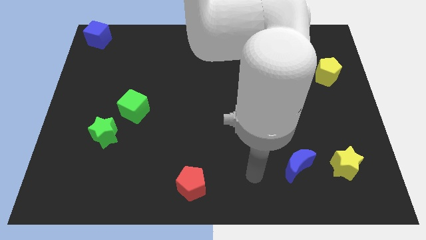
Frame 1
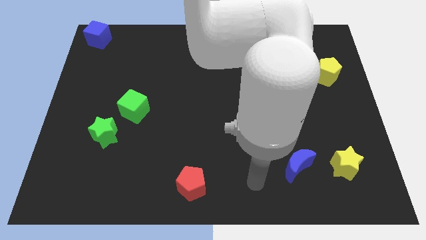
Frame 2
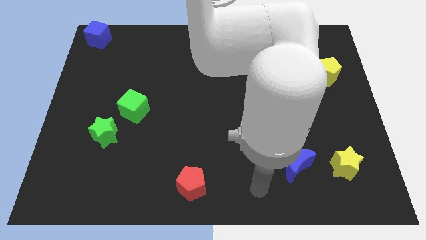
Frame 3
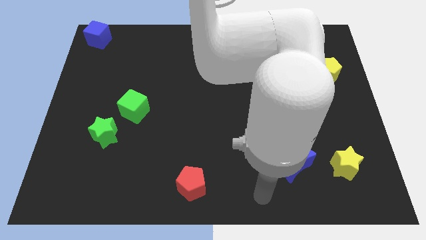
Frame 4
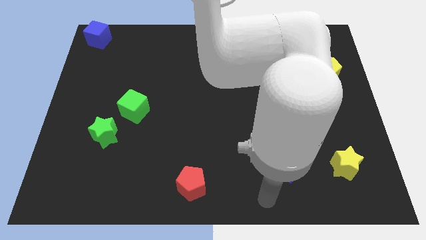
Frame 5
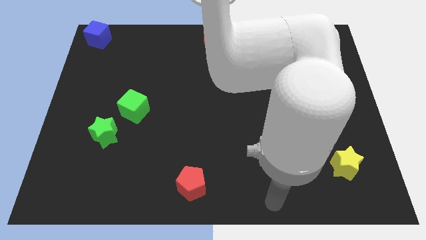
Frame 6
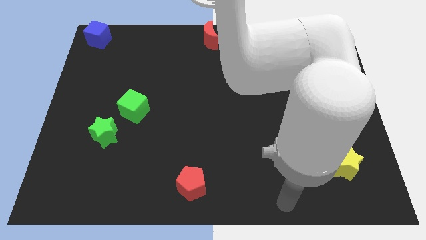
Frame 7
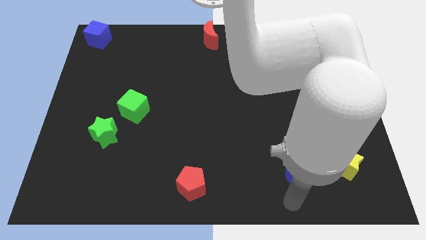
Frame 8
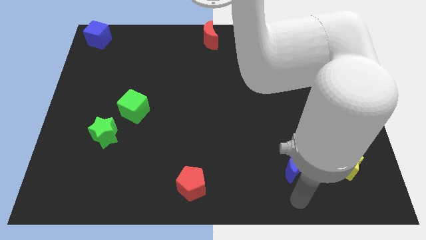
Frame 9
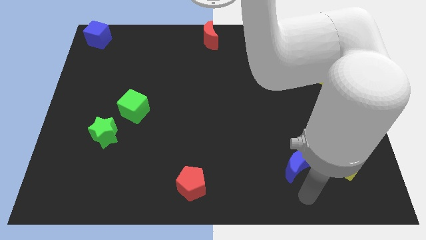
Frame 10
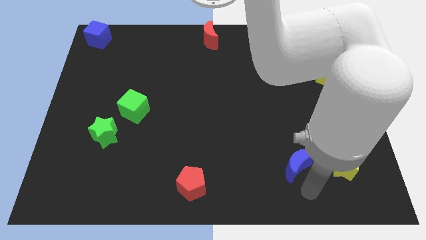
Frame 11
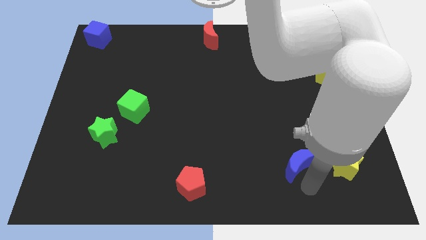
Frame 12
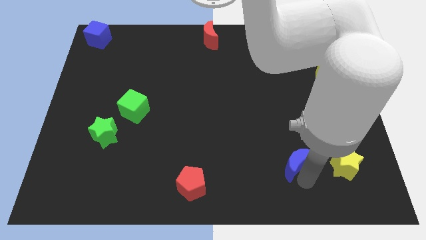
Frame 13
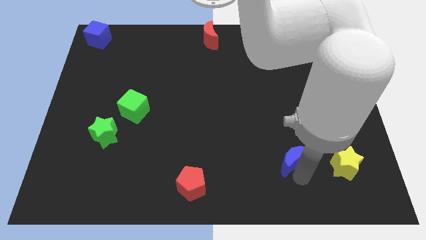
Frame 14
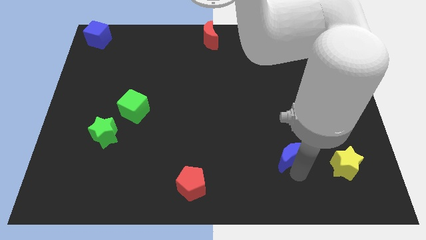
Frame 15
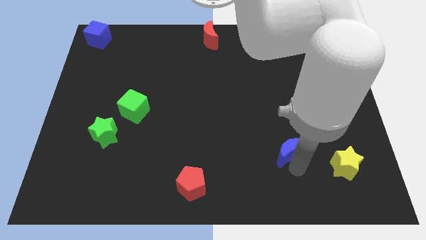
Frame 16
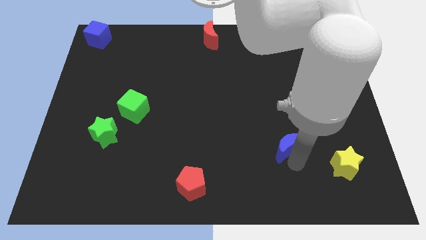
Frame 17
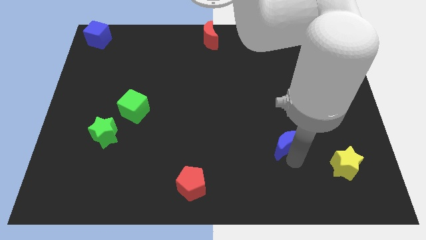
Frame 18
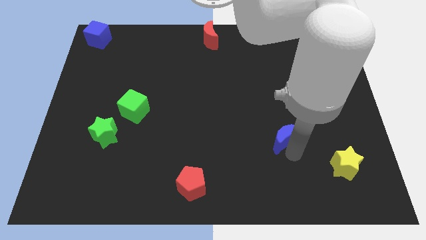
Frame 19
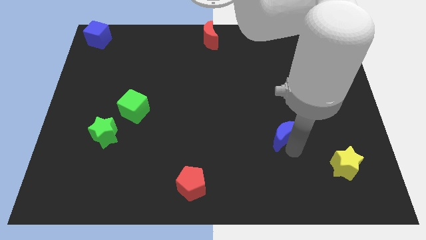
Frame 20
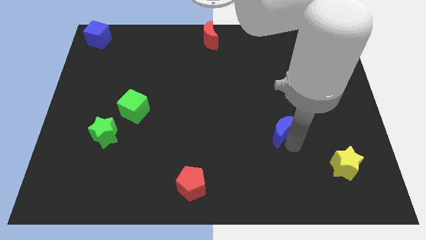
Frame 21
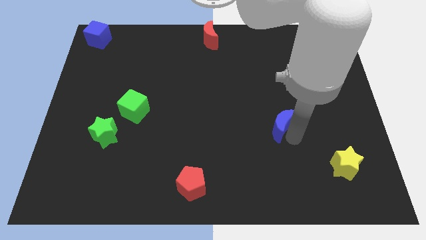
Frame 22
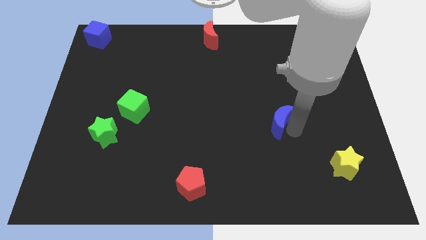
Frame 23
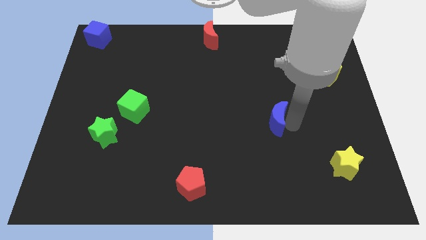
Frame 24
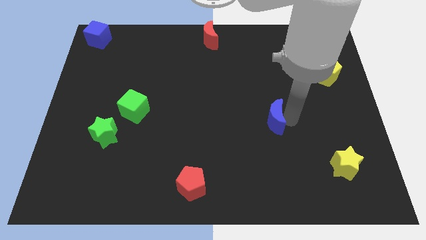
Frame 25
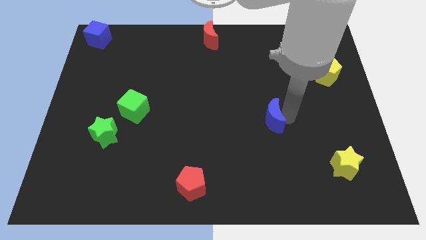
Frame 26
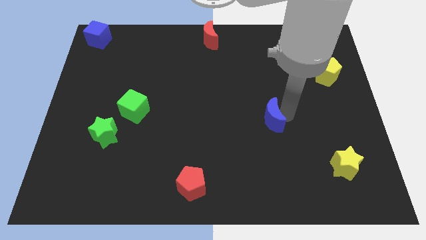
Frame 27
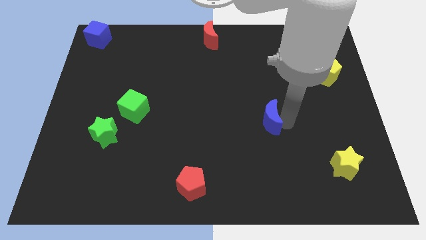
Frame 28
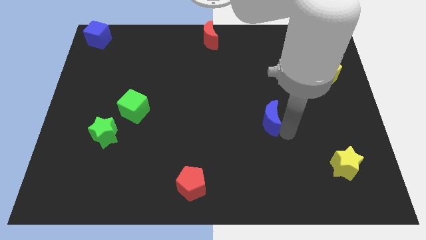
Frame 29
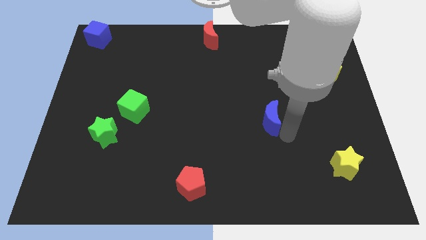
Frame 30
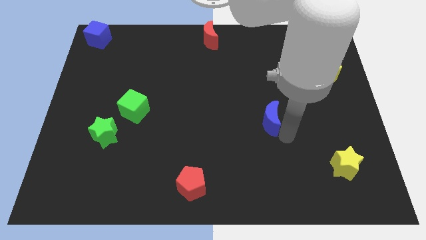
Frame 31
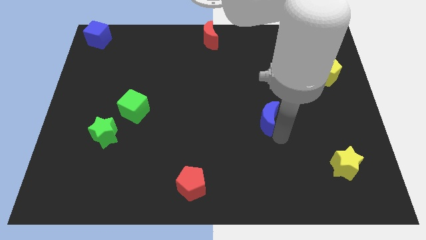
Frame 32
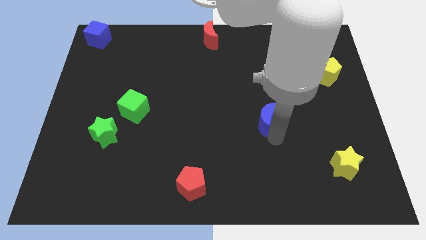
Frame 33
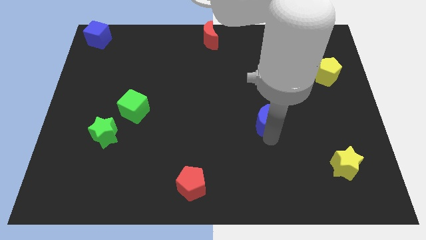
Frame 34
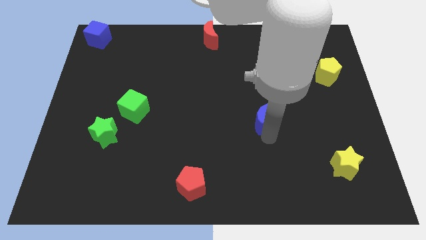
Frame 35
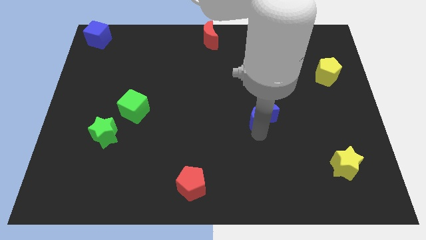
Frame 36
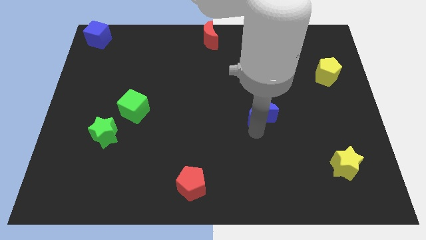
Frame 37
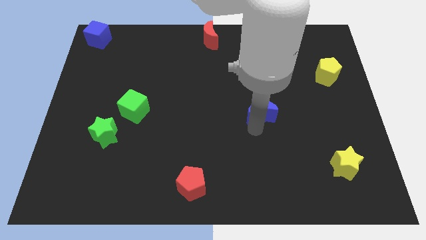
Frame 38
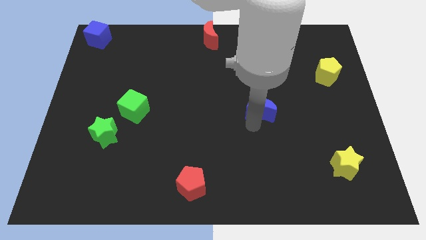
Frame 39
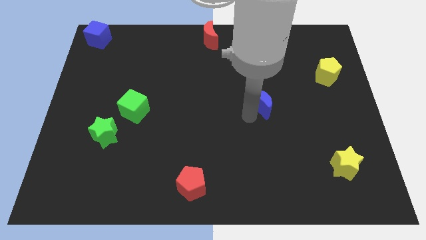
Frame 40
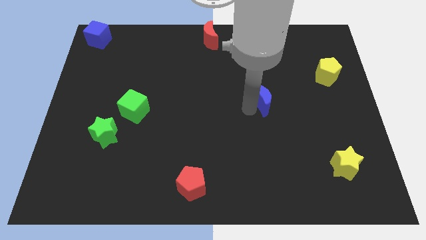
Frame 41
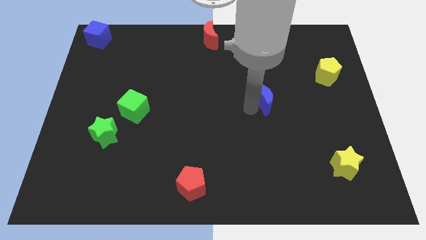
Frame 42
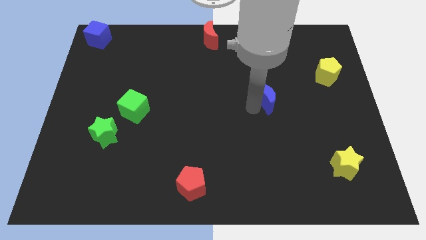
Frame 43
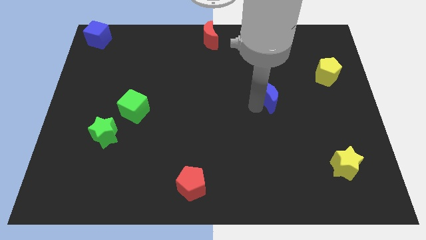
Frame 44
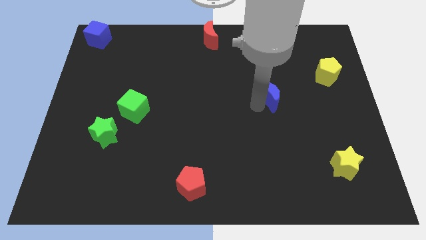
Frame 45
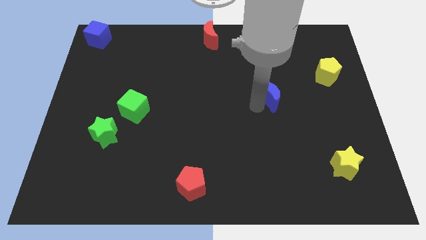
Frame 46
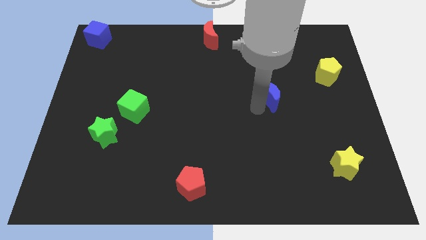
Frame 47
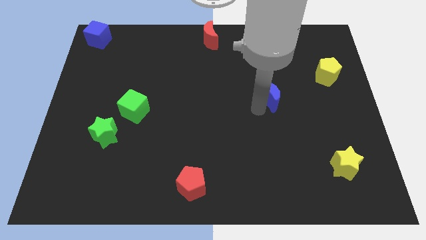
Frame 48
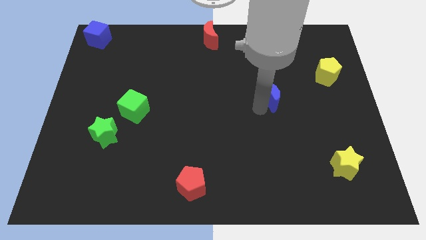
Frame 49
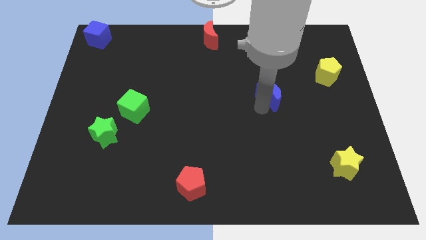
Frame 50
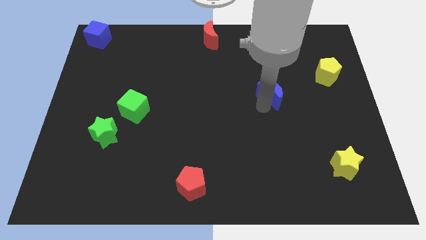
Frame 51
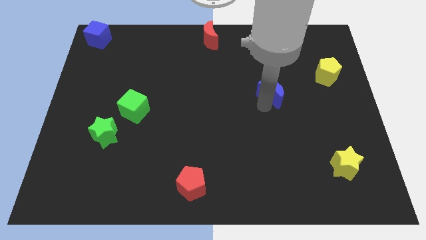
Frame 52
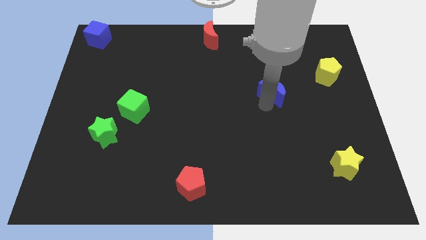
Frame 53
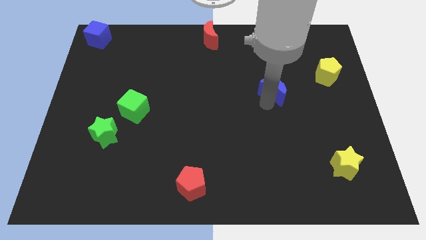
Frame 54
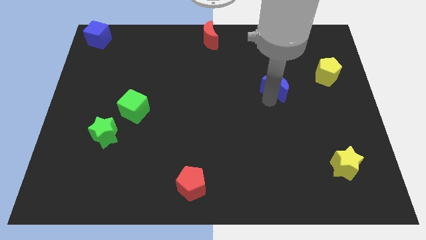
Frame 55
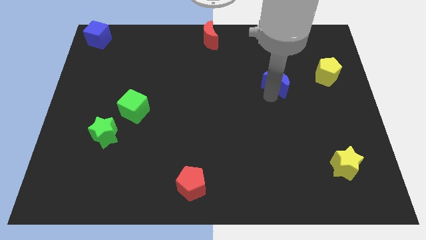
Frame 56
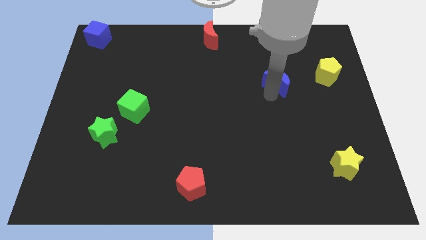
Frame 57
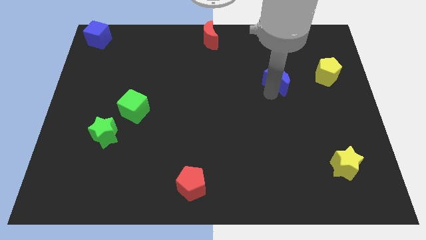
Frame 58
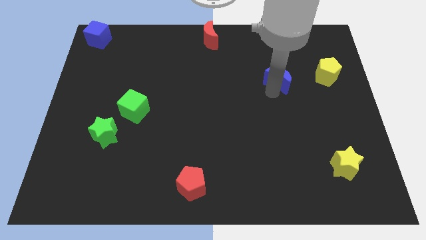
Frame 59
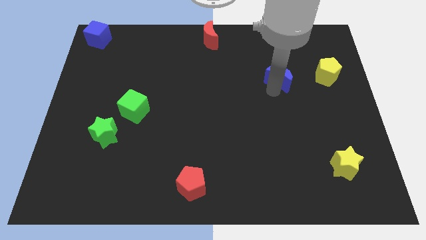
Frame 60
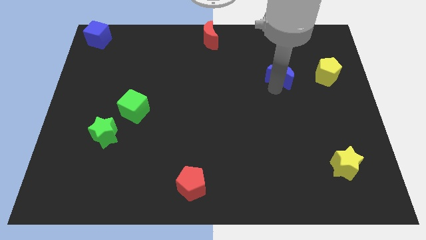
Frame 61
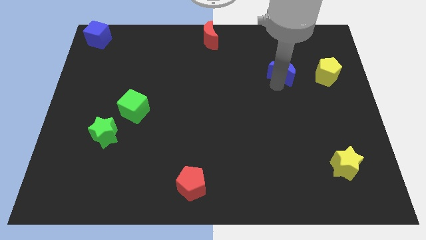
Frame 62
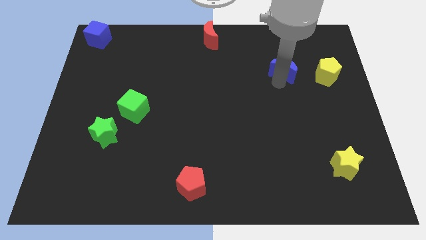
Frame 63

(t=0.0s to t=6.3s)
place the blue moon left to the yellow pentagon

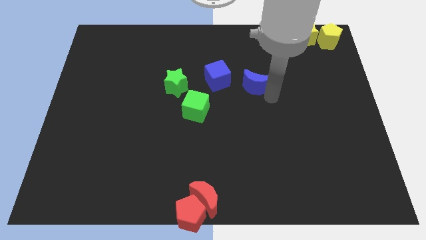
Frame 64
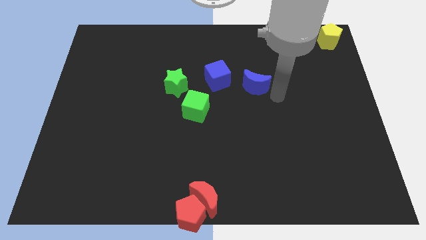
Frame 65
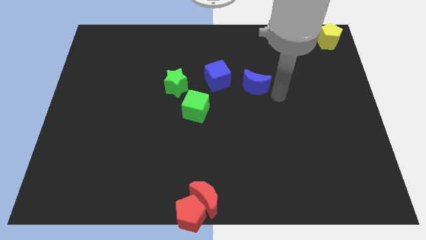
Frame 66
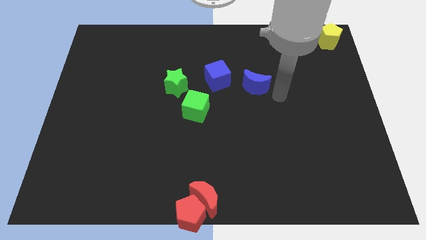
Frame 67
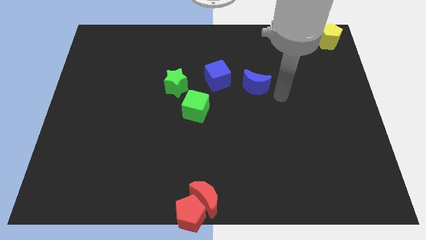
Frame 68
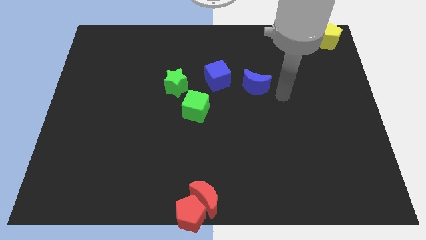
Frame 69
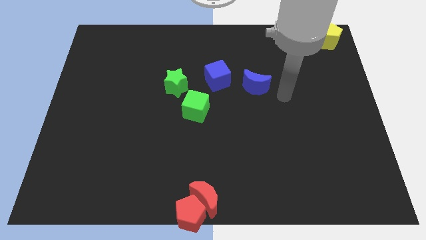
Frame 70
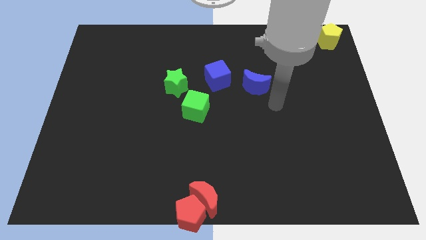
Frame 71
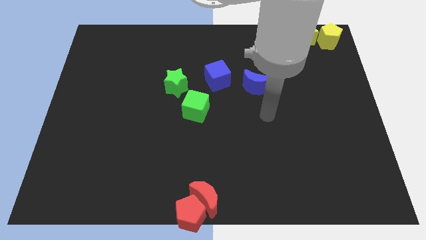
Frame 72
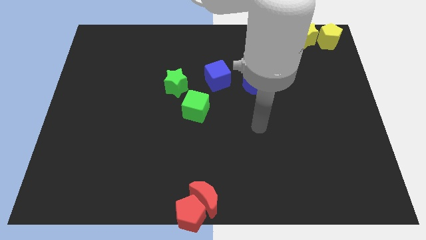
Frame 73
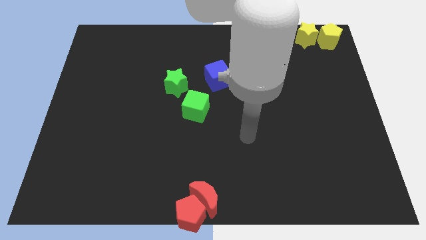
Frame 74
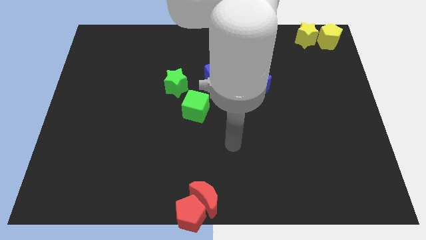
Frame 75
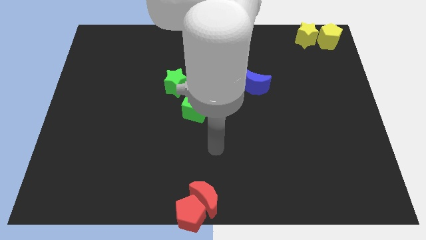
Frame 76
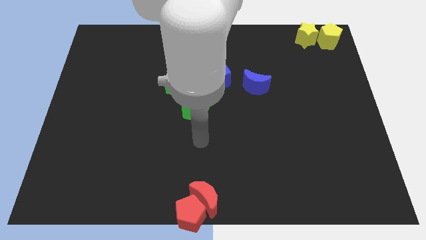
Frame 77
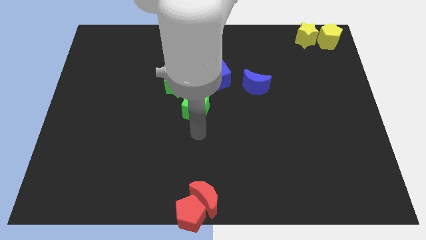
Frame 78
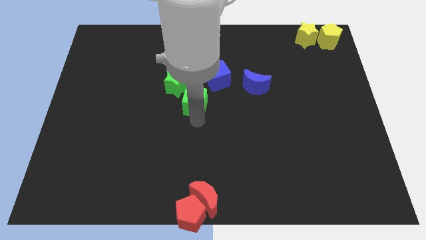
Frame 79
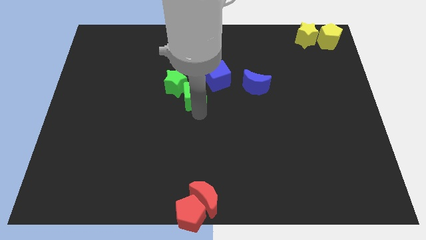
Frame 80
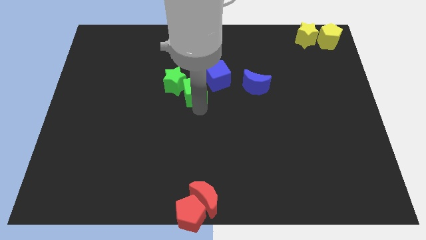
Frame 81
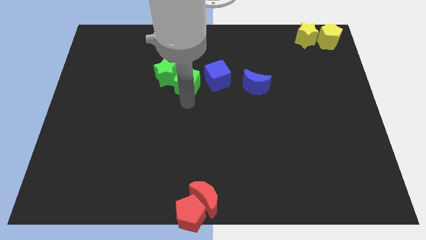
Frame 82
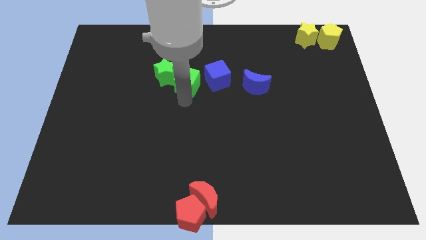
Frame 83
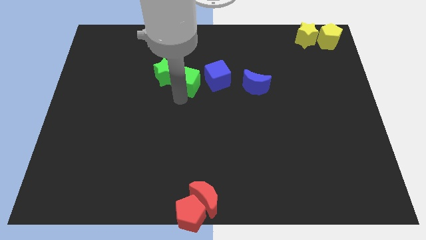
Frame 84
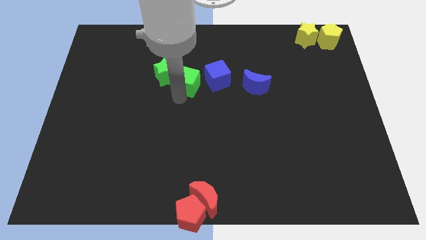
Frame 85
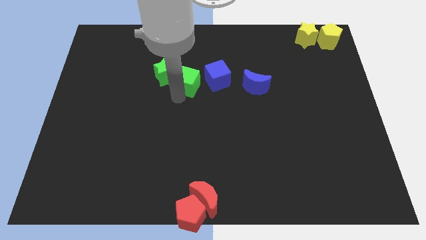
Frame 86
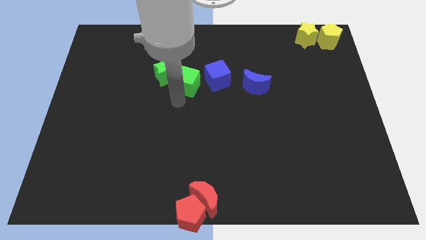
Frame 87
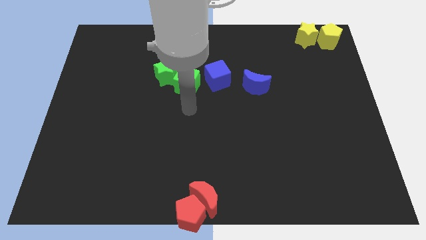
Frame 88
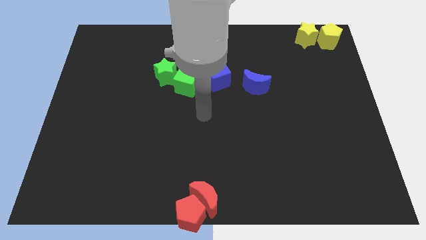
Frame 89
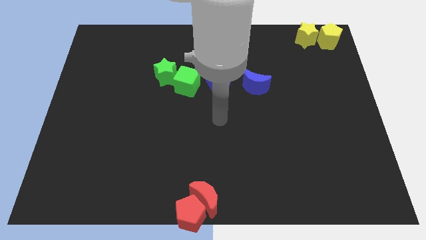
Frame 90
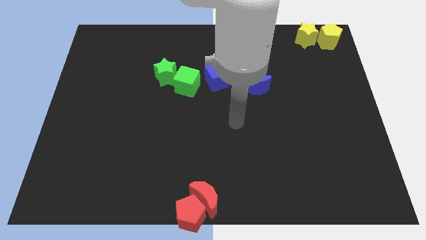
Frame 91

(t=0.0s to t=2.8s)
place the green cube in between green star and blue cube
